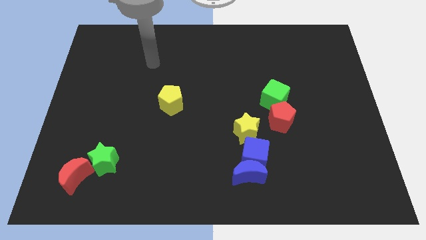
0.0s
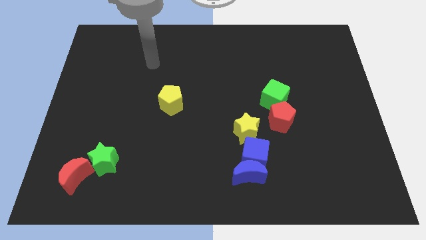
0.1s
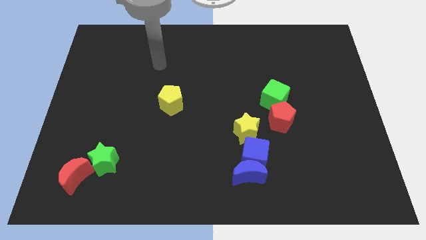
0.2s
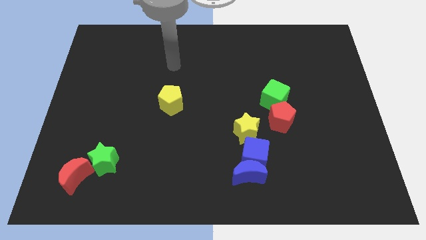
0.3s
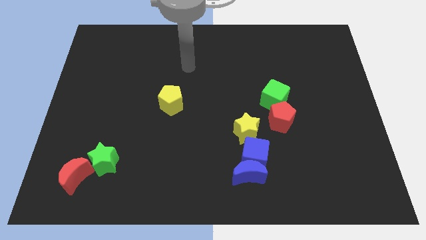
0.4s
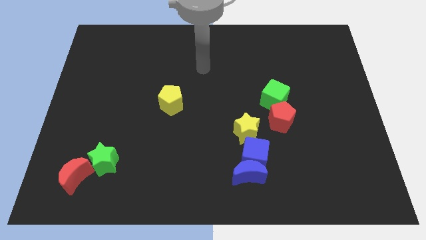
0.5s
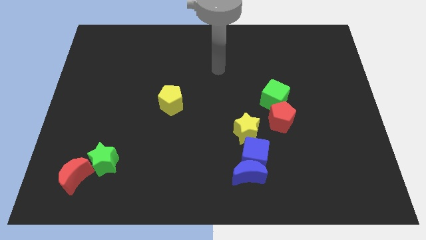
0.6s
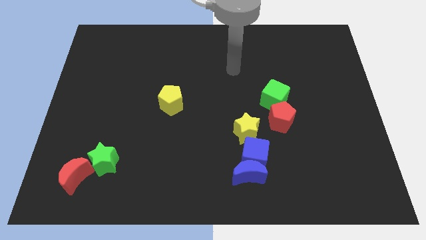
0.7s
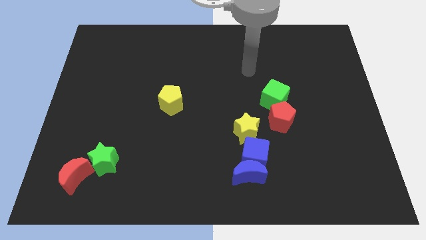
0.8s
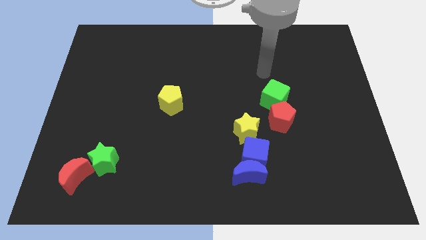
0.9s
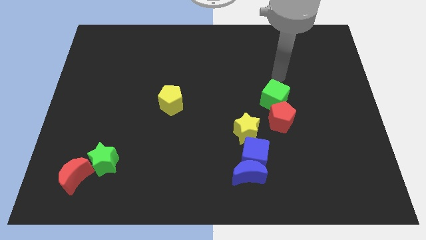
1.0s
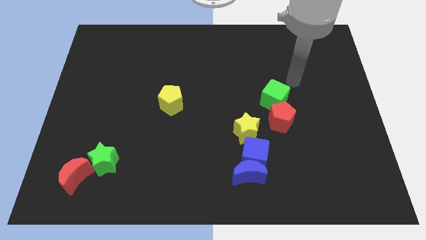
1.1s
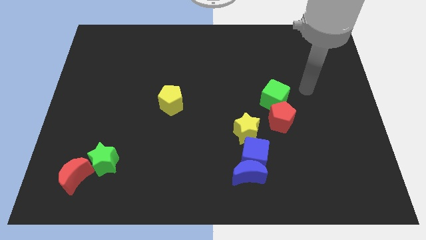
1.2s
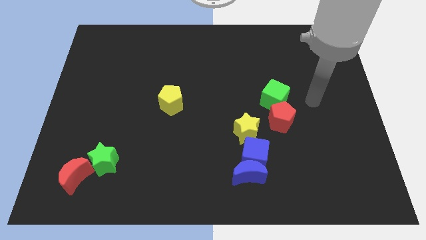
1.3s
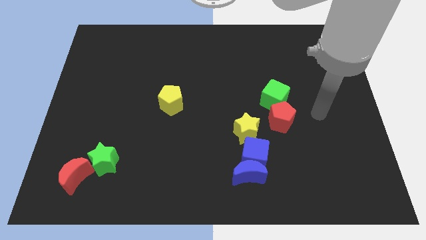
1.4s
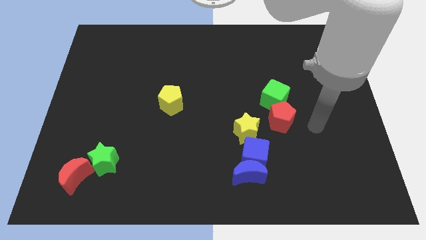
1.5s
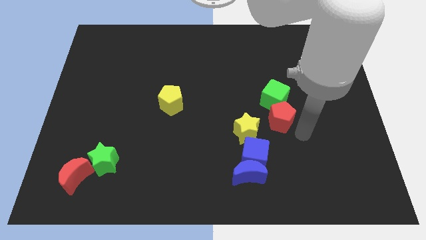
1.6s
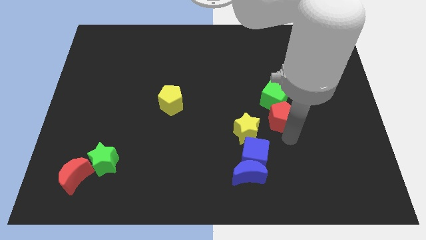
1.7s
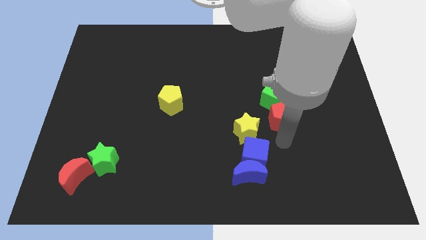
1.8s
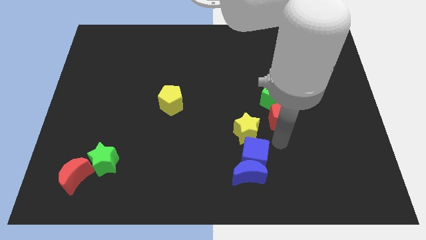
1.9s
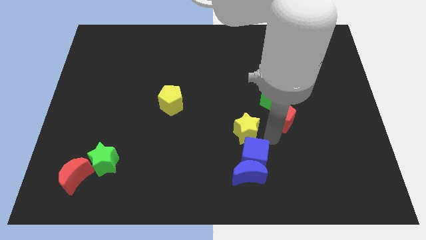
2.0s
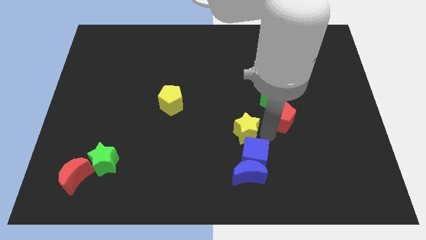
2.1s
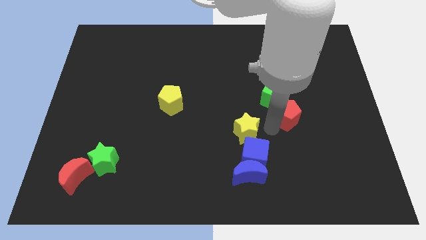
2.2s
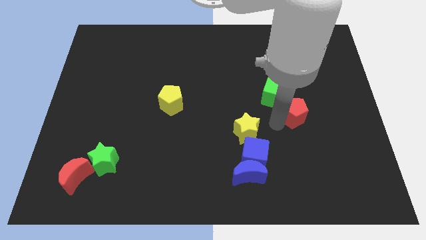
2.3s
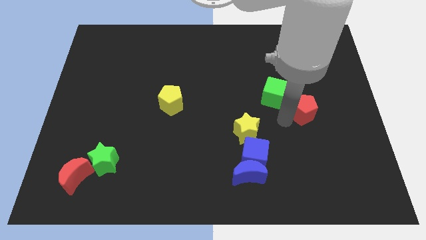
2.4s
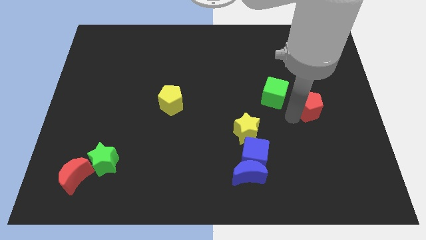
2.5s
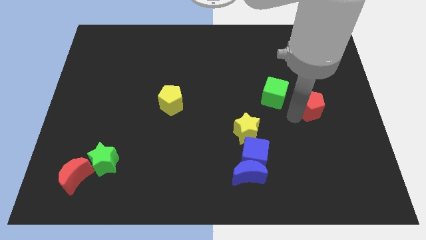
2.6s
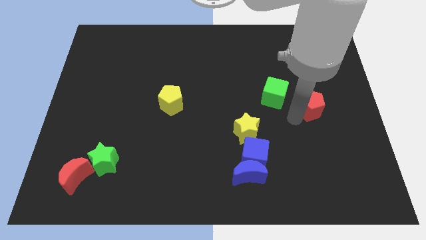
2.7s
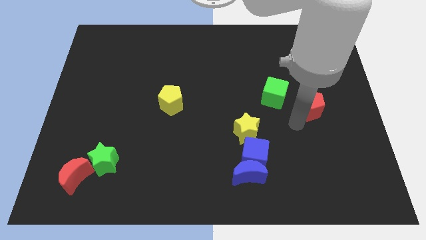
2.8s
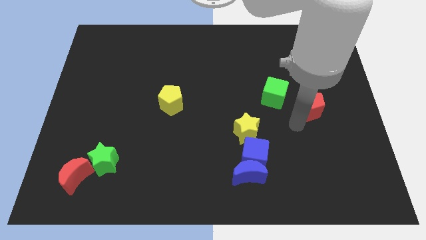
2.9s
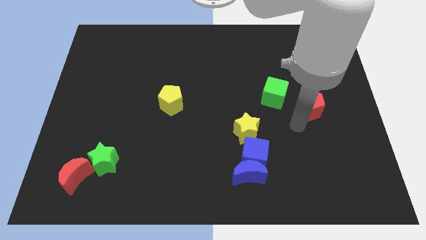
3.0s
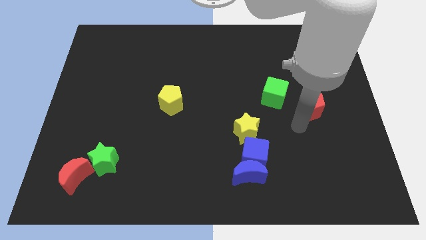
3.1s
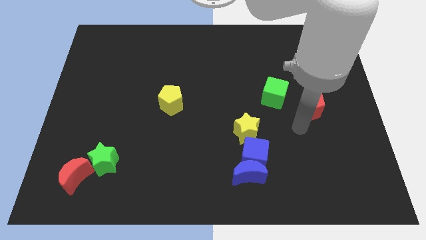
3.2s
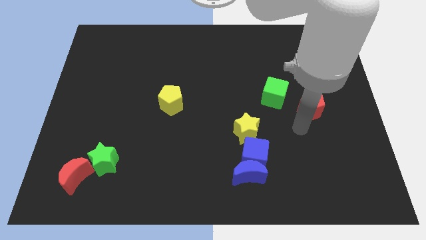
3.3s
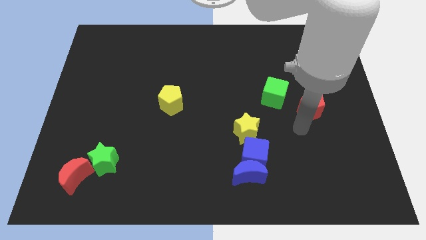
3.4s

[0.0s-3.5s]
place the arm diagonal to the green cube

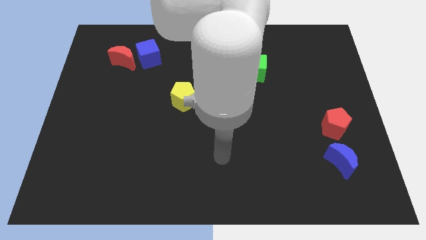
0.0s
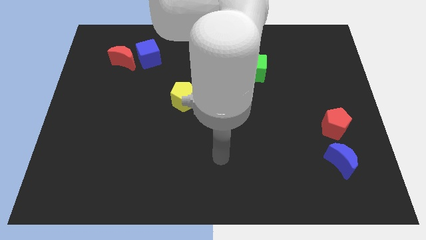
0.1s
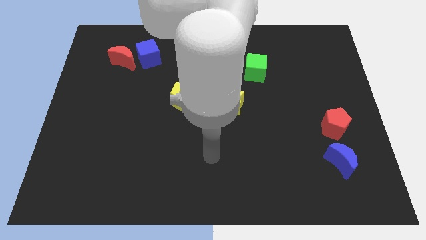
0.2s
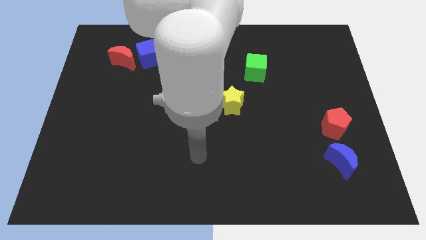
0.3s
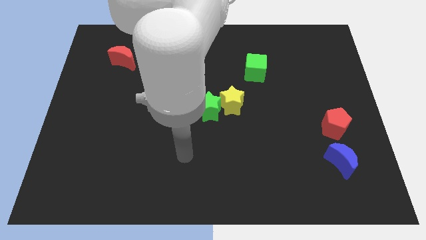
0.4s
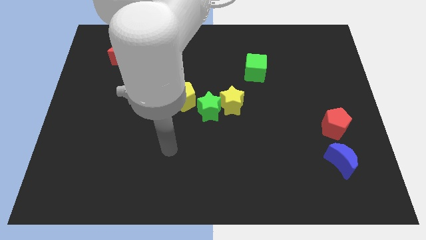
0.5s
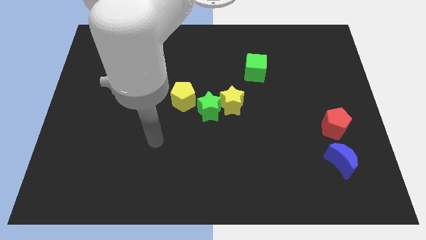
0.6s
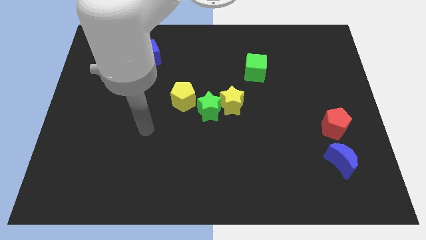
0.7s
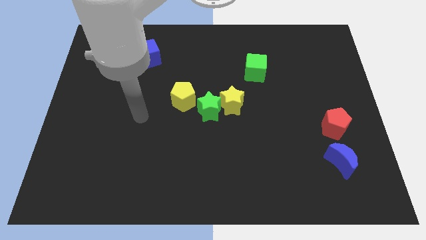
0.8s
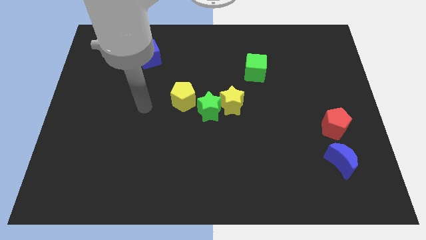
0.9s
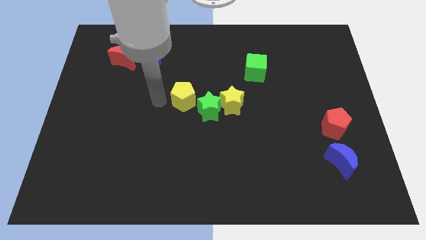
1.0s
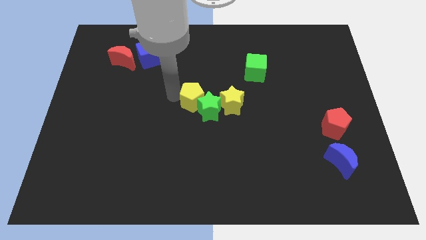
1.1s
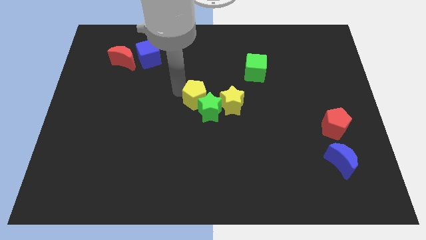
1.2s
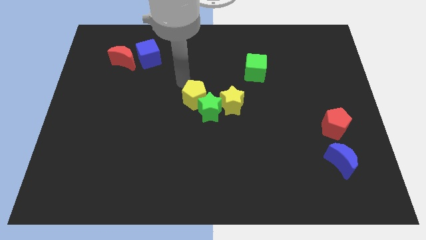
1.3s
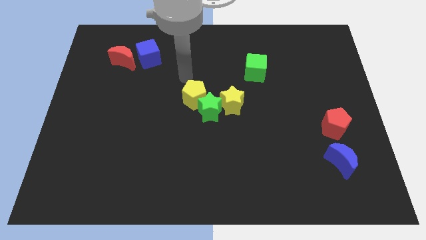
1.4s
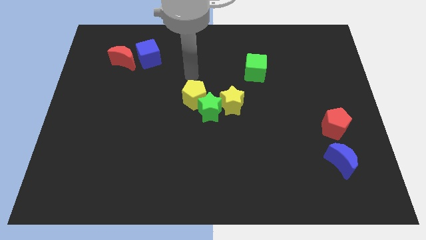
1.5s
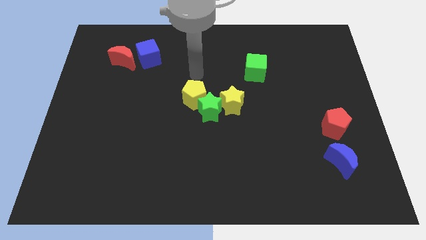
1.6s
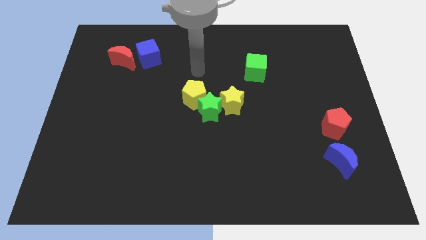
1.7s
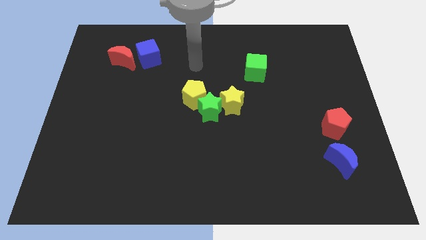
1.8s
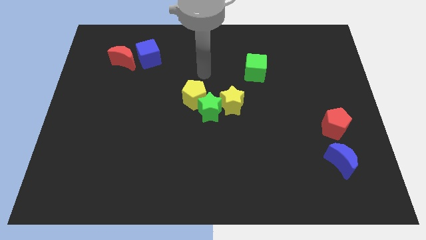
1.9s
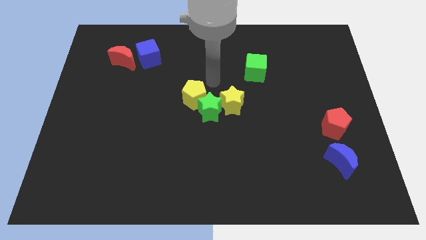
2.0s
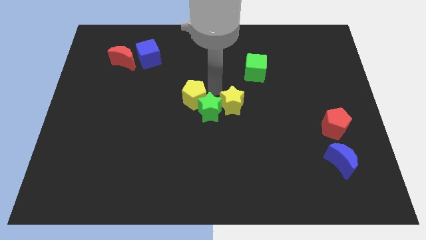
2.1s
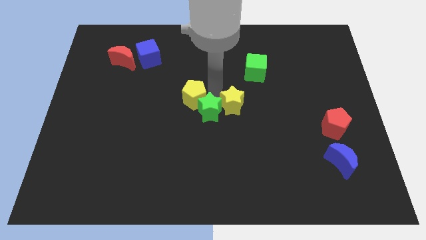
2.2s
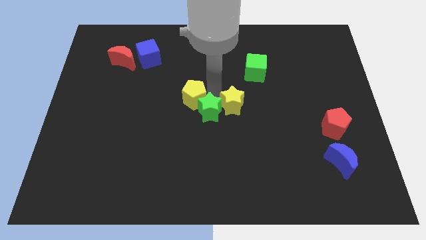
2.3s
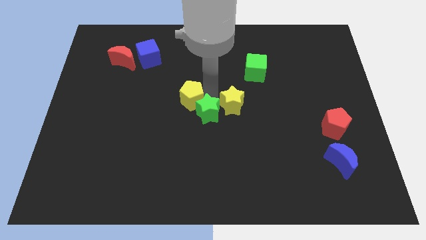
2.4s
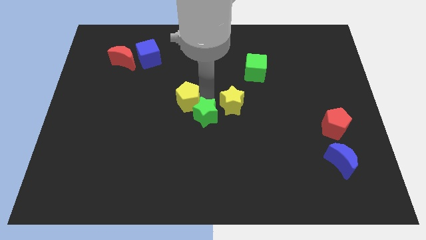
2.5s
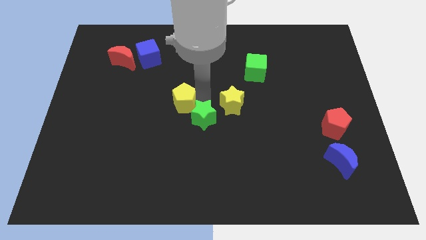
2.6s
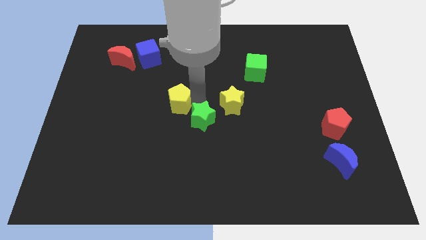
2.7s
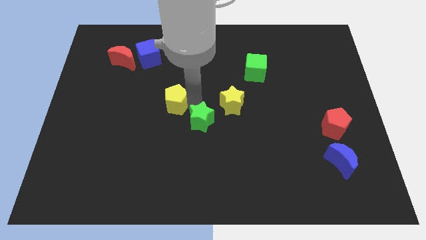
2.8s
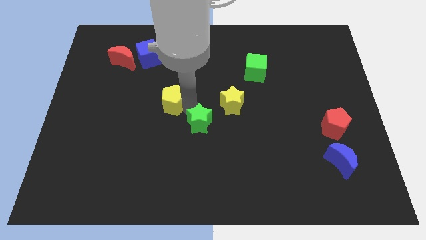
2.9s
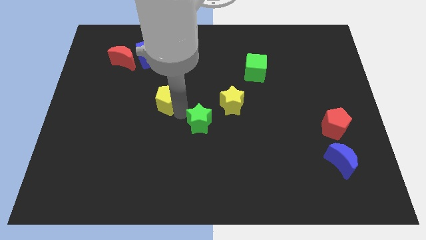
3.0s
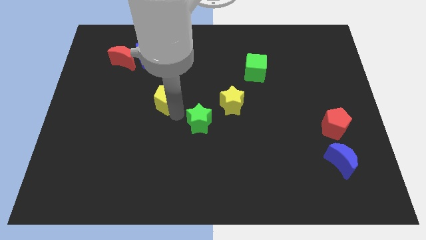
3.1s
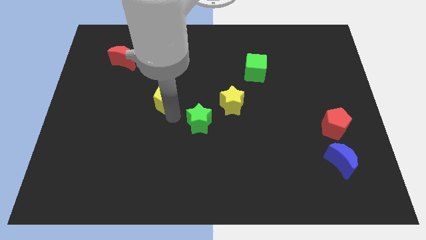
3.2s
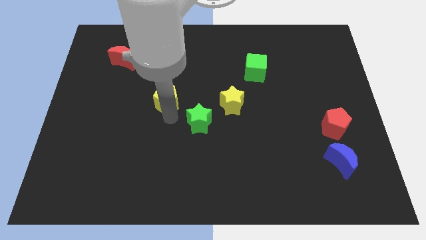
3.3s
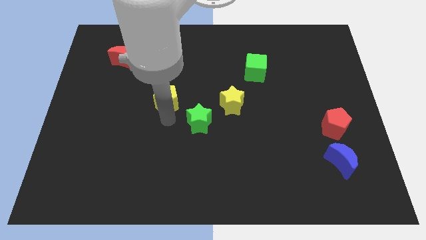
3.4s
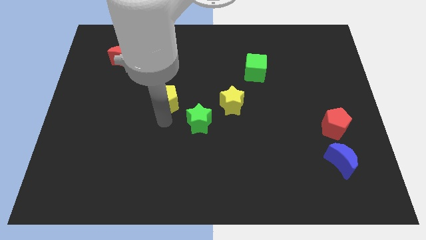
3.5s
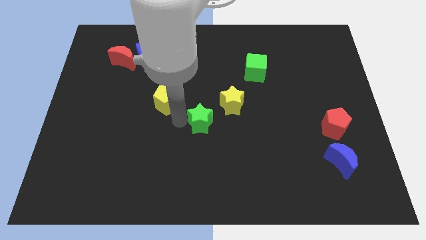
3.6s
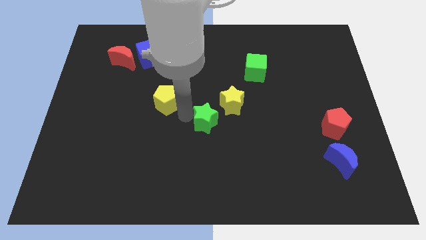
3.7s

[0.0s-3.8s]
separate the green star from the yellow blocks

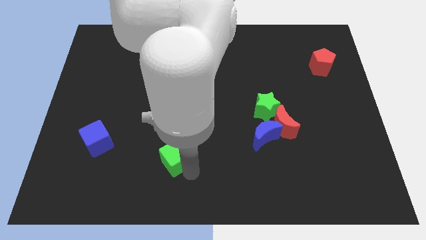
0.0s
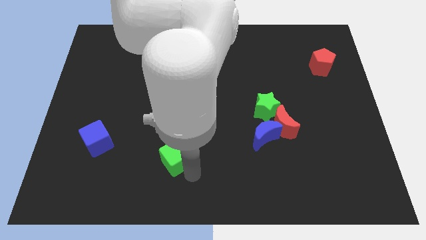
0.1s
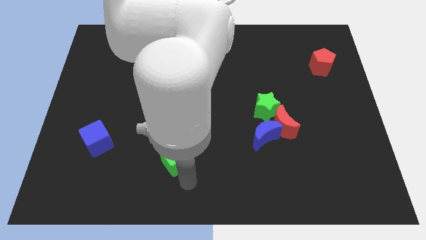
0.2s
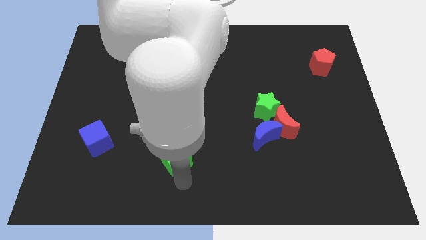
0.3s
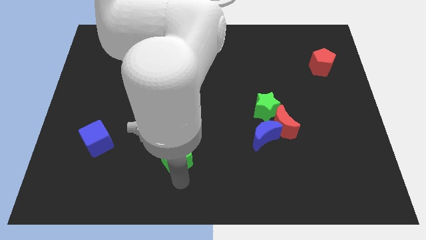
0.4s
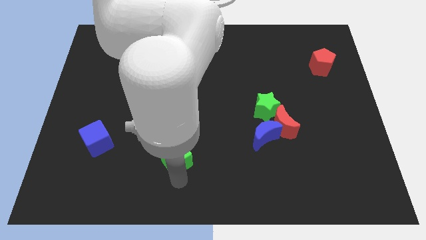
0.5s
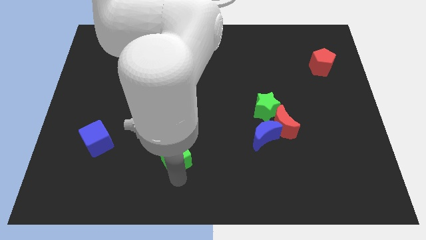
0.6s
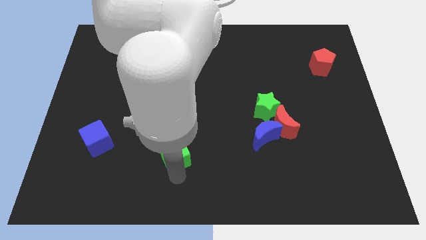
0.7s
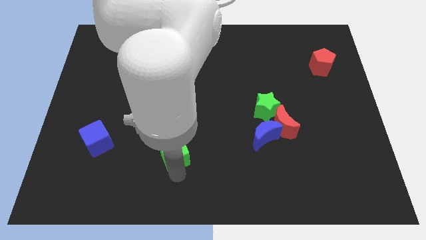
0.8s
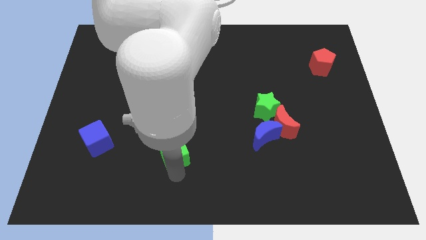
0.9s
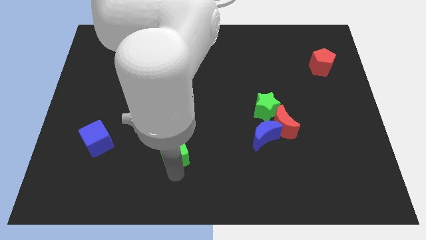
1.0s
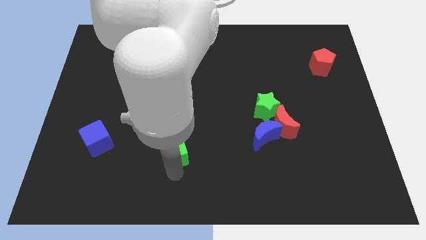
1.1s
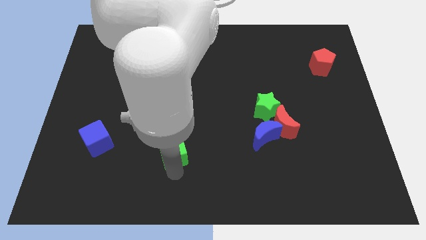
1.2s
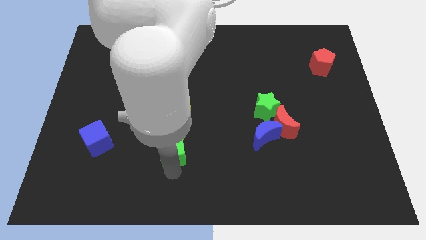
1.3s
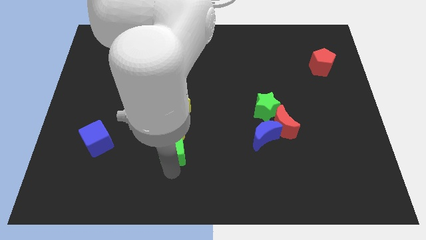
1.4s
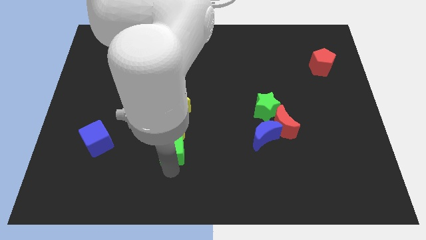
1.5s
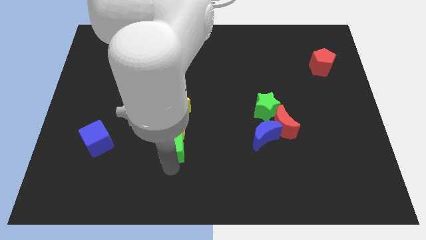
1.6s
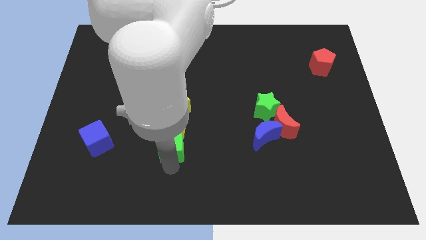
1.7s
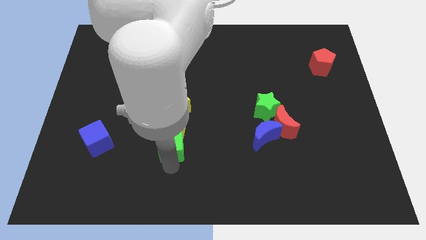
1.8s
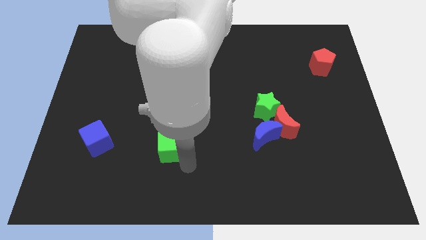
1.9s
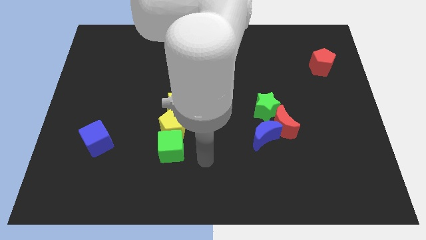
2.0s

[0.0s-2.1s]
move the green cube into the yellow pentagon
